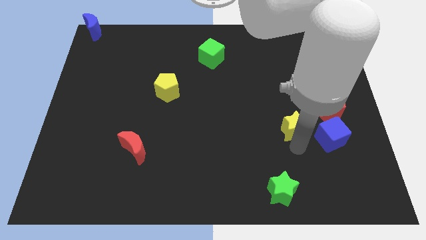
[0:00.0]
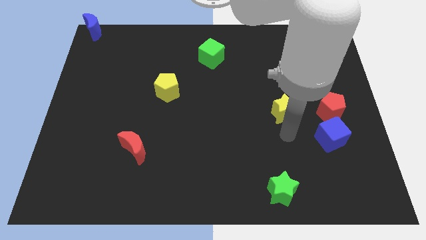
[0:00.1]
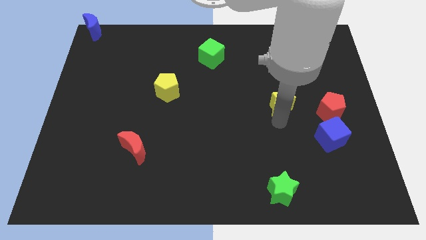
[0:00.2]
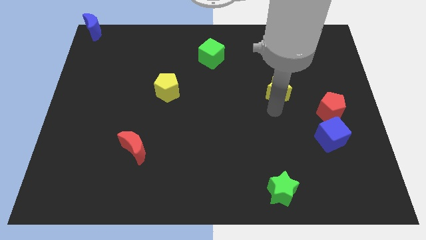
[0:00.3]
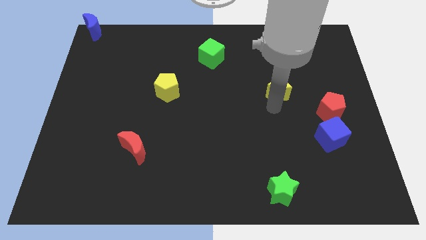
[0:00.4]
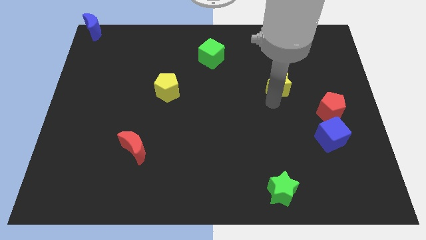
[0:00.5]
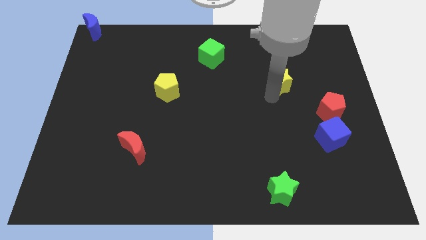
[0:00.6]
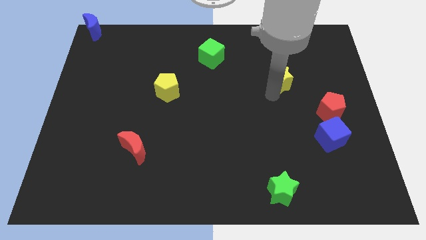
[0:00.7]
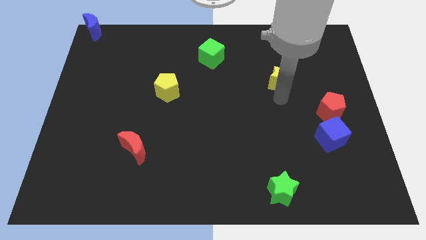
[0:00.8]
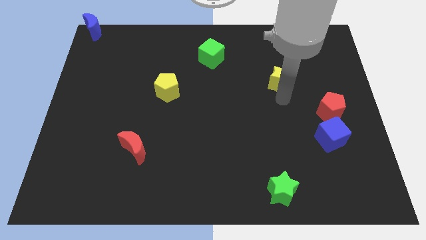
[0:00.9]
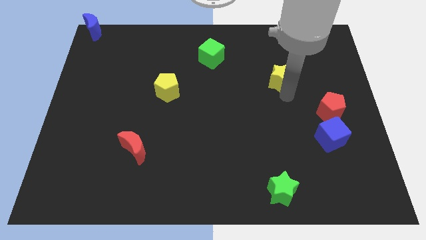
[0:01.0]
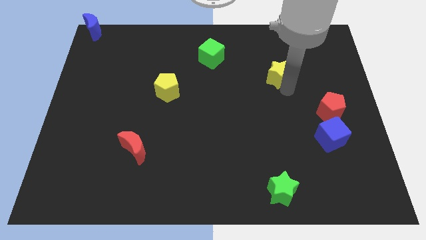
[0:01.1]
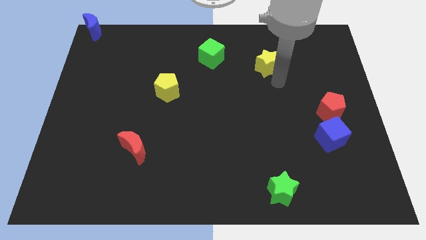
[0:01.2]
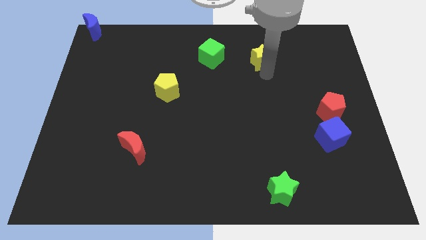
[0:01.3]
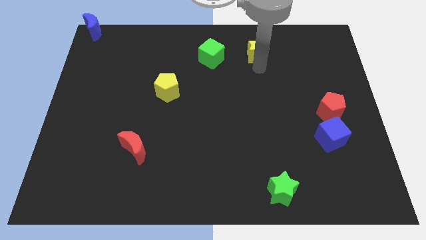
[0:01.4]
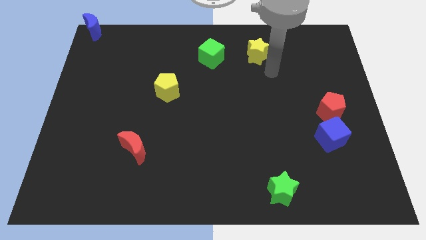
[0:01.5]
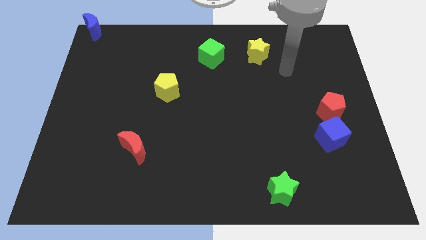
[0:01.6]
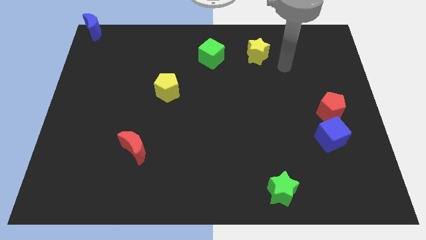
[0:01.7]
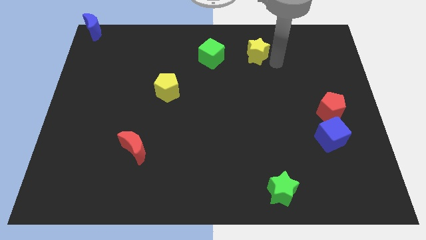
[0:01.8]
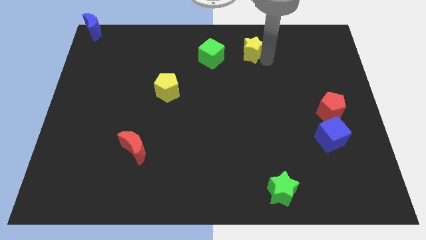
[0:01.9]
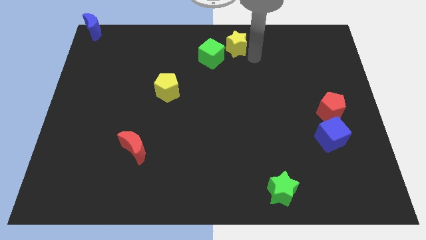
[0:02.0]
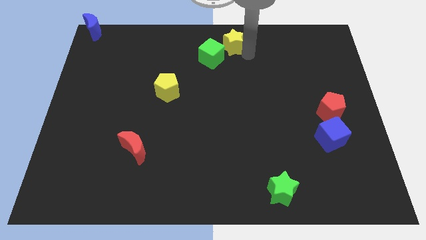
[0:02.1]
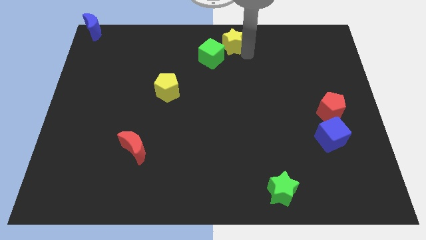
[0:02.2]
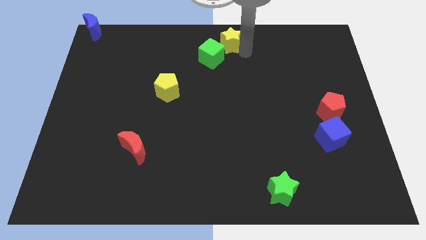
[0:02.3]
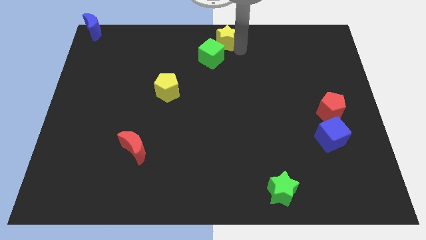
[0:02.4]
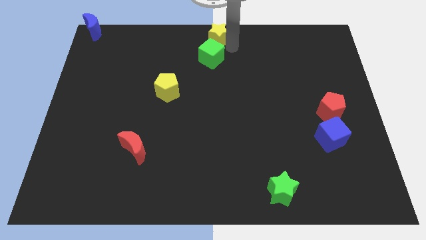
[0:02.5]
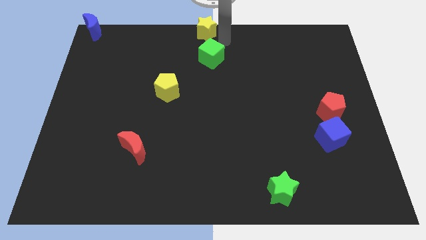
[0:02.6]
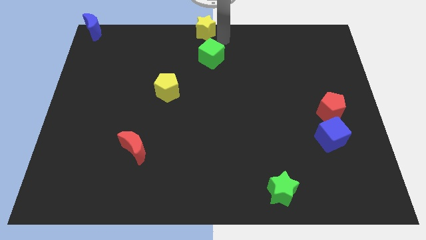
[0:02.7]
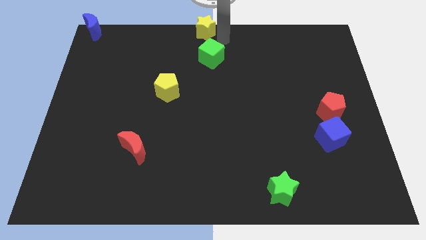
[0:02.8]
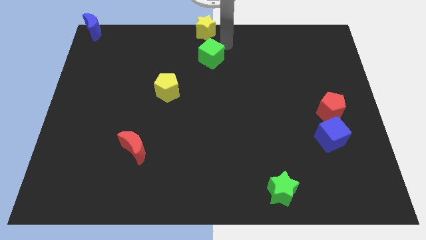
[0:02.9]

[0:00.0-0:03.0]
place the yellow star on the top center corner

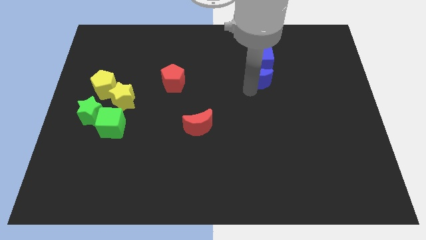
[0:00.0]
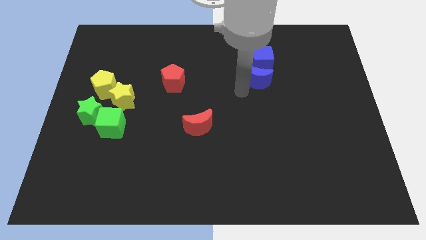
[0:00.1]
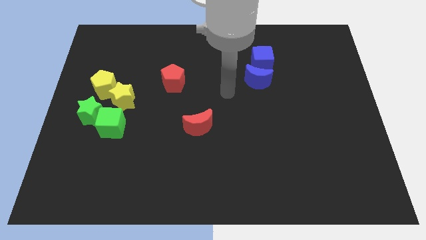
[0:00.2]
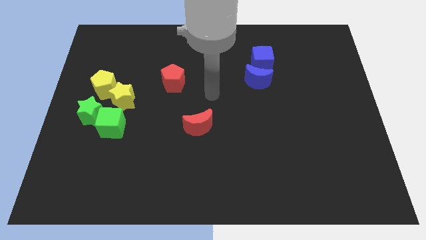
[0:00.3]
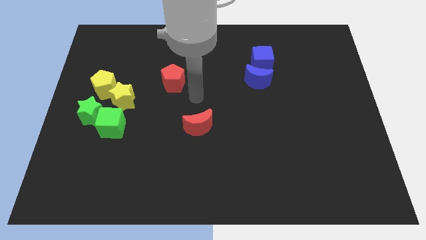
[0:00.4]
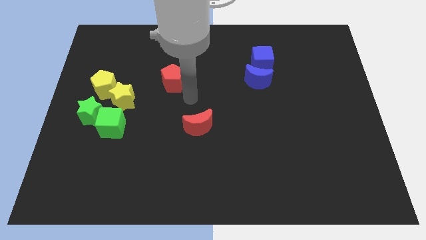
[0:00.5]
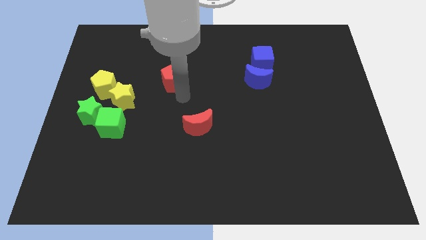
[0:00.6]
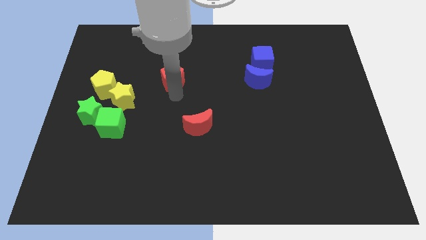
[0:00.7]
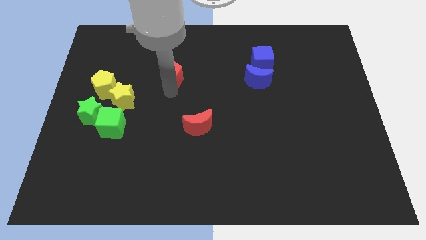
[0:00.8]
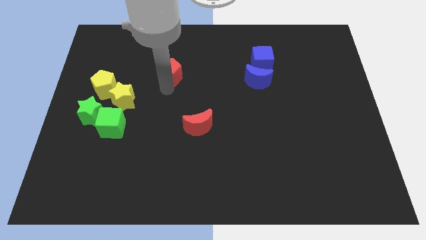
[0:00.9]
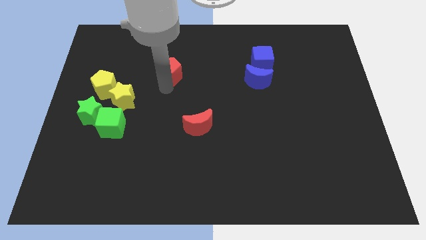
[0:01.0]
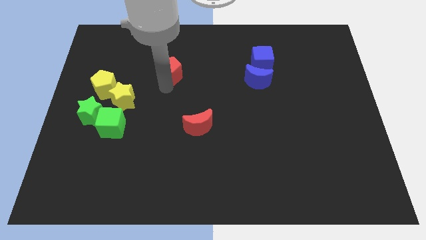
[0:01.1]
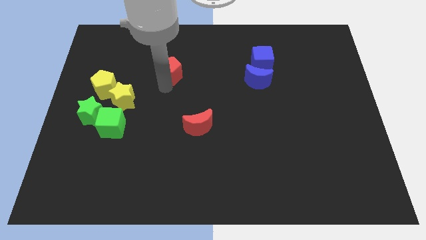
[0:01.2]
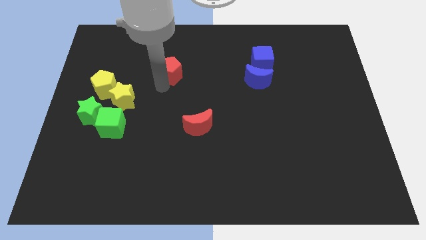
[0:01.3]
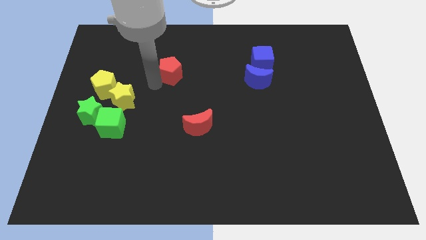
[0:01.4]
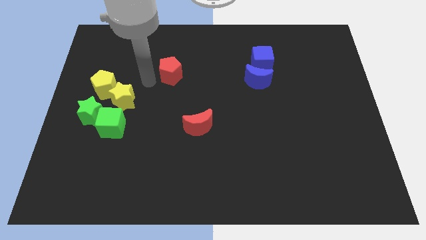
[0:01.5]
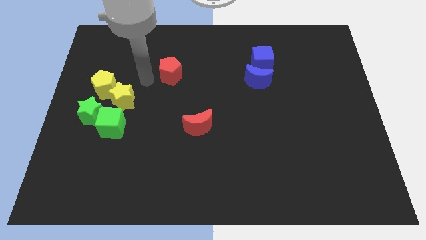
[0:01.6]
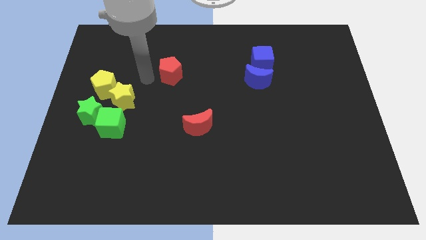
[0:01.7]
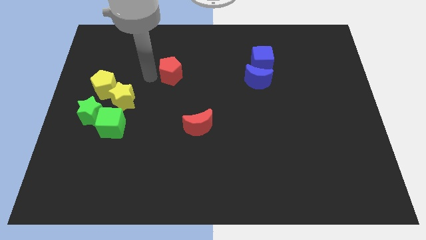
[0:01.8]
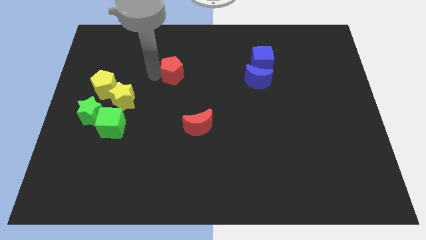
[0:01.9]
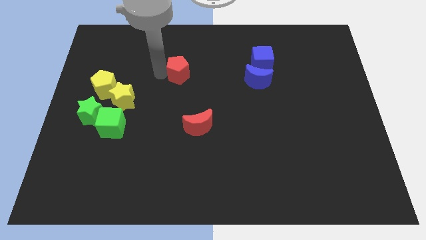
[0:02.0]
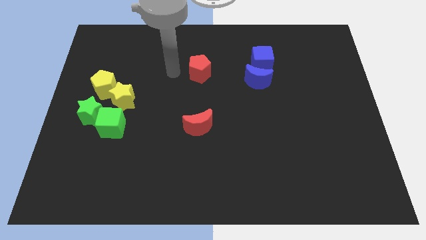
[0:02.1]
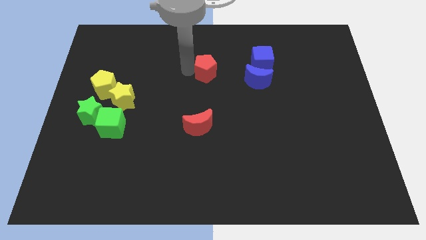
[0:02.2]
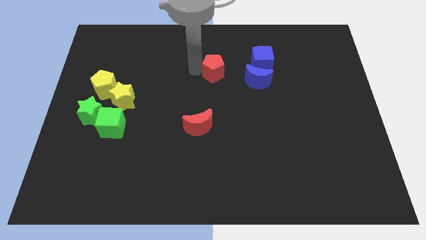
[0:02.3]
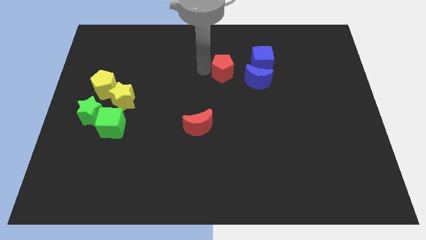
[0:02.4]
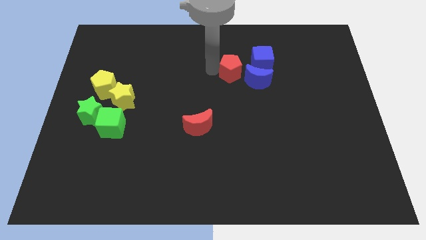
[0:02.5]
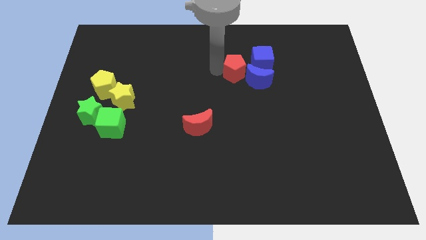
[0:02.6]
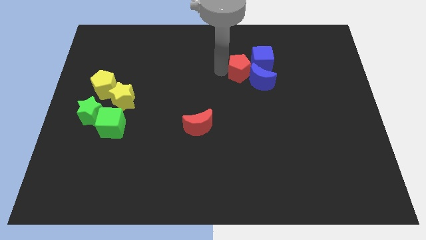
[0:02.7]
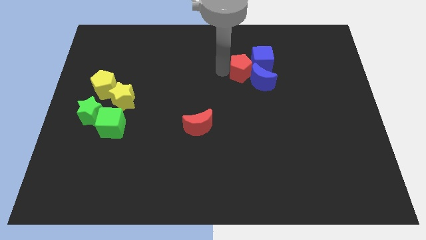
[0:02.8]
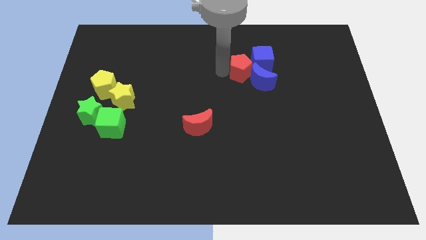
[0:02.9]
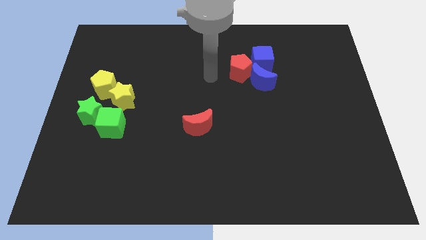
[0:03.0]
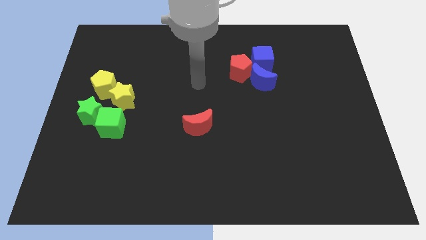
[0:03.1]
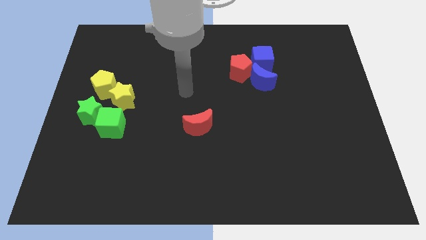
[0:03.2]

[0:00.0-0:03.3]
move the red pentagon into the blue moon

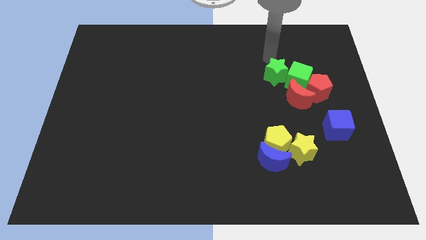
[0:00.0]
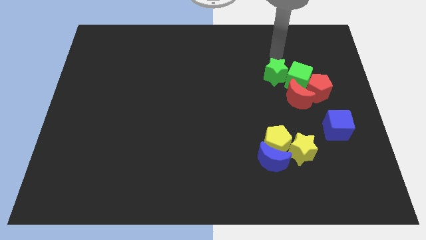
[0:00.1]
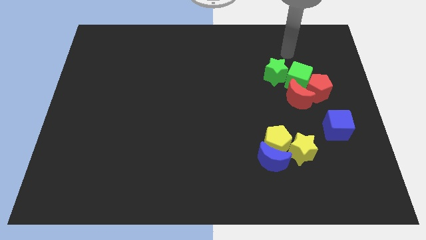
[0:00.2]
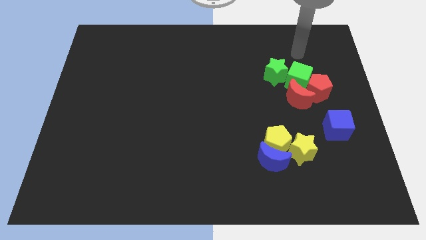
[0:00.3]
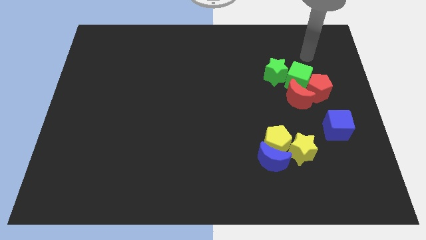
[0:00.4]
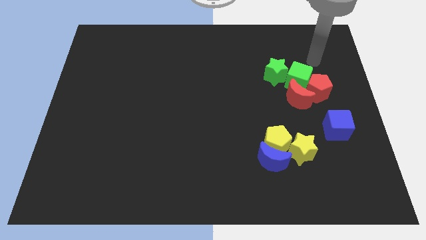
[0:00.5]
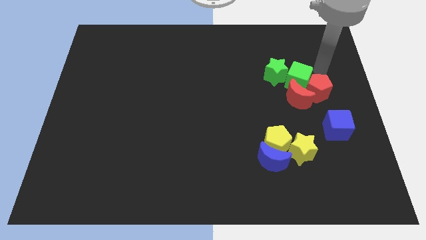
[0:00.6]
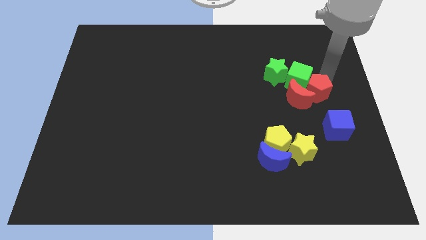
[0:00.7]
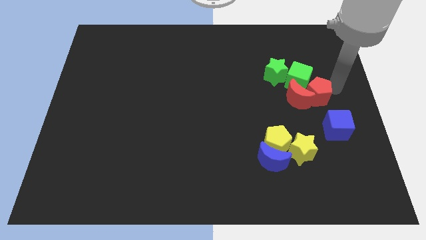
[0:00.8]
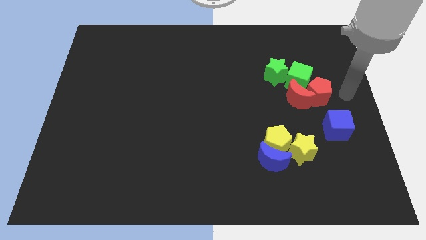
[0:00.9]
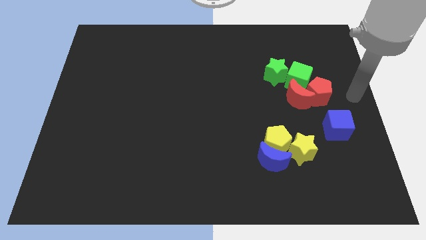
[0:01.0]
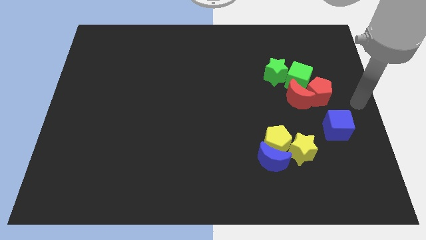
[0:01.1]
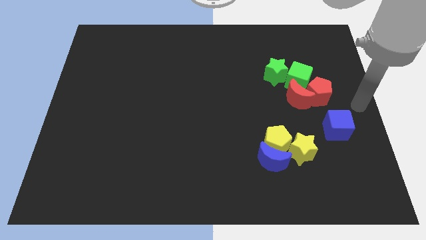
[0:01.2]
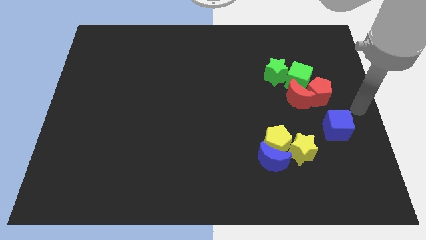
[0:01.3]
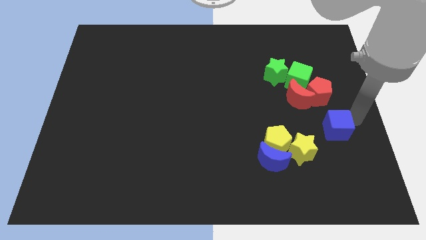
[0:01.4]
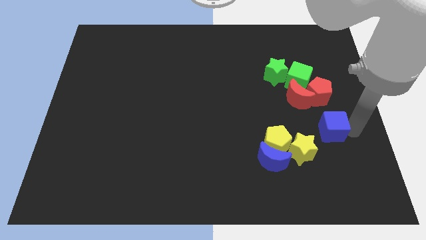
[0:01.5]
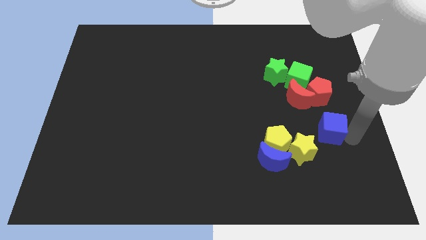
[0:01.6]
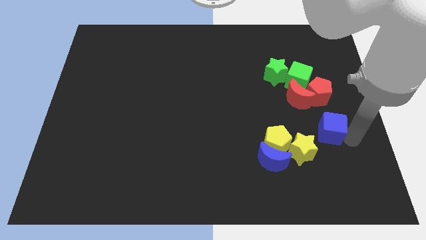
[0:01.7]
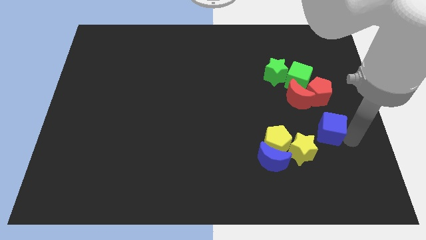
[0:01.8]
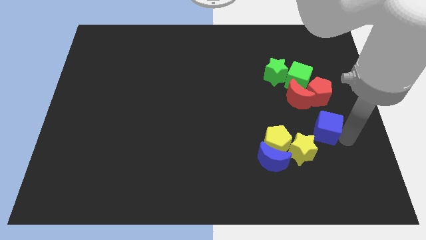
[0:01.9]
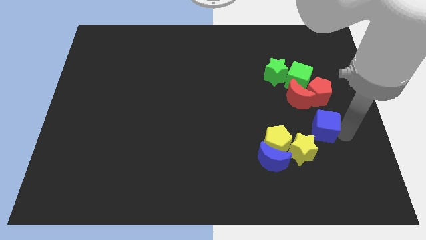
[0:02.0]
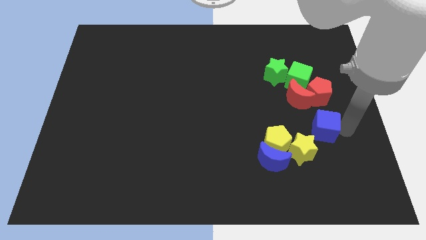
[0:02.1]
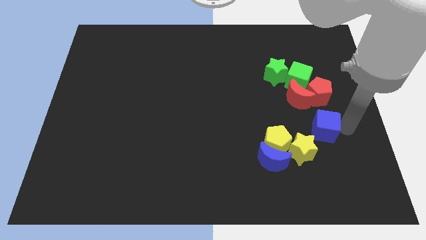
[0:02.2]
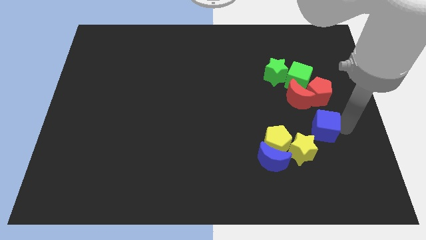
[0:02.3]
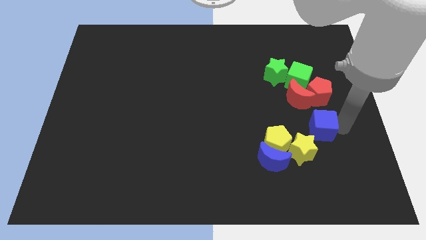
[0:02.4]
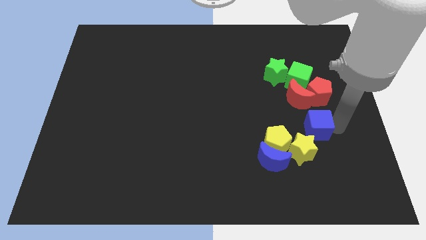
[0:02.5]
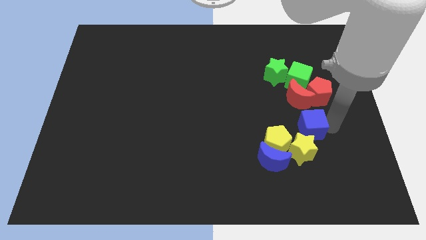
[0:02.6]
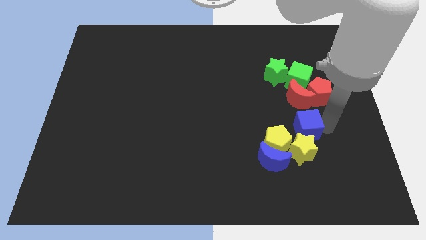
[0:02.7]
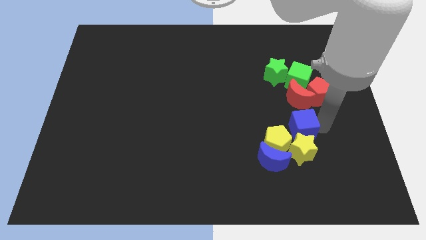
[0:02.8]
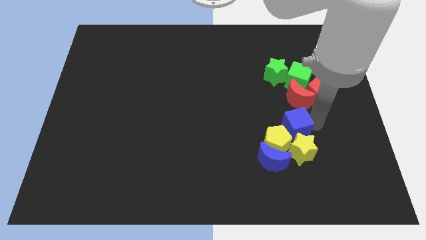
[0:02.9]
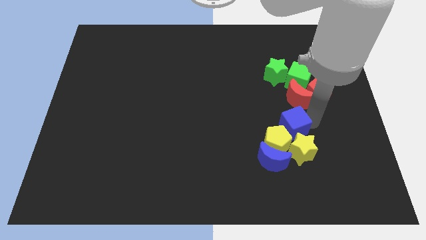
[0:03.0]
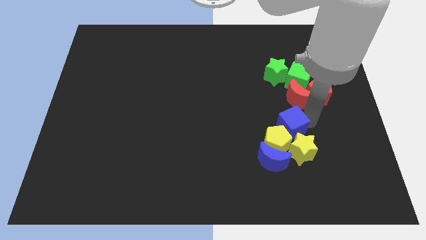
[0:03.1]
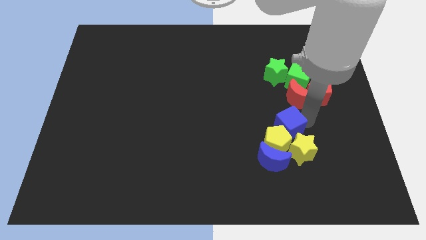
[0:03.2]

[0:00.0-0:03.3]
move the blue cube between red blocks and yellow blocks
